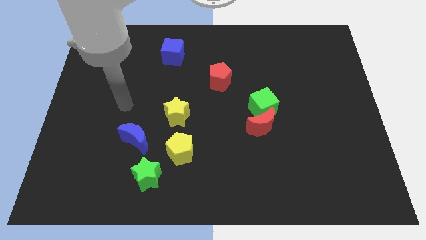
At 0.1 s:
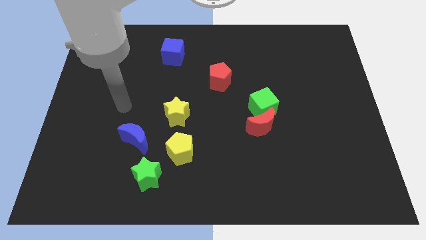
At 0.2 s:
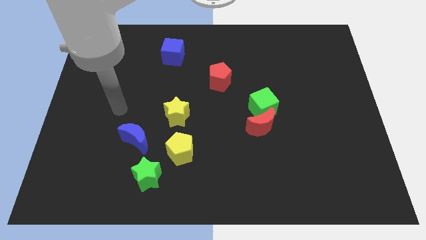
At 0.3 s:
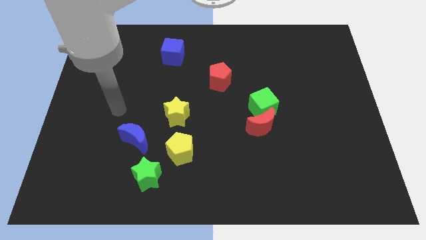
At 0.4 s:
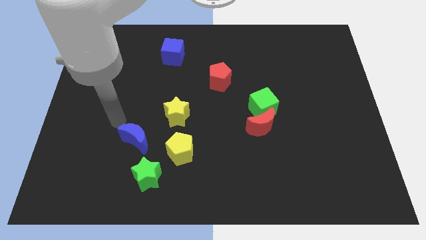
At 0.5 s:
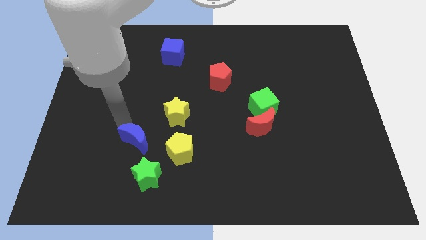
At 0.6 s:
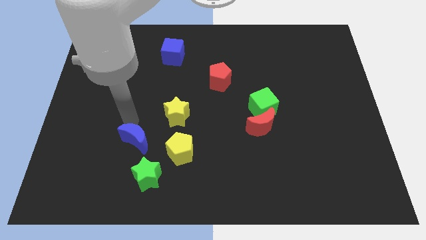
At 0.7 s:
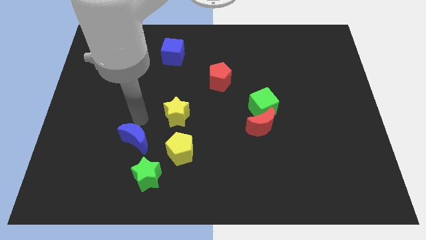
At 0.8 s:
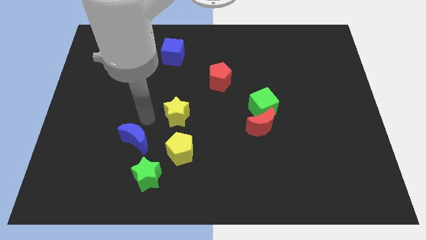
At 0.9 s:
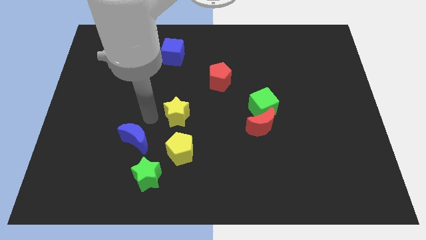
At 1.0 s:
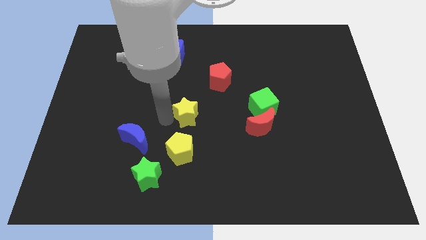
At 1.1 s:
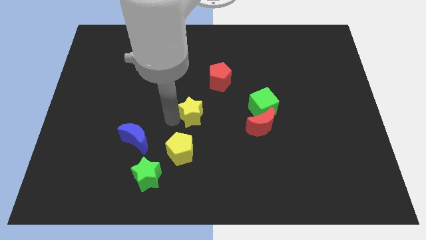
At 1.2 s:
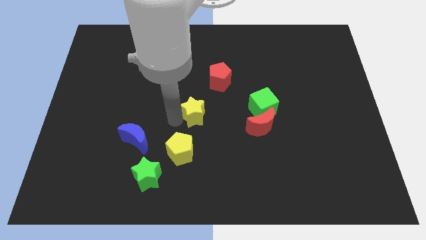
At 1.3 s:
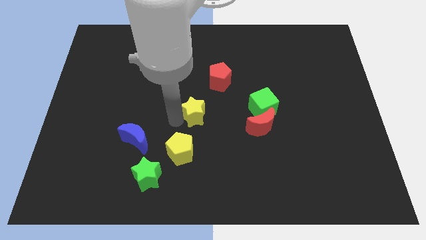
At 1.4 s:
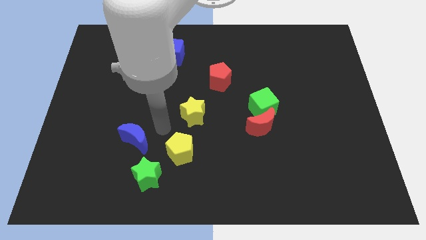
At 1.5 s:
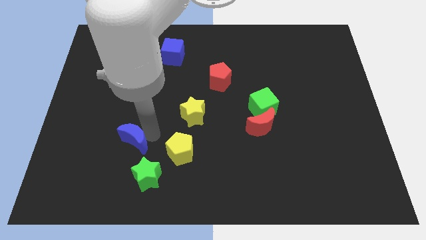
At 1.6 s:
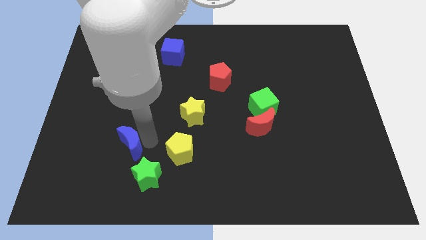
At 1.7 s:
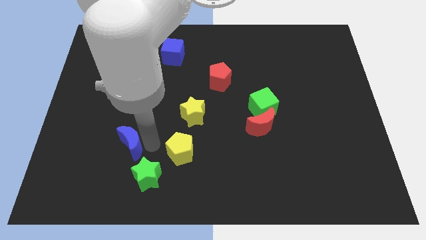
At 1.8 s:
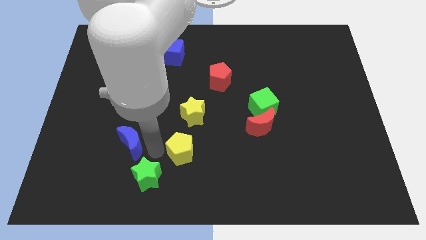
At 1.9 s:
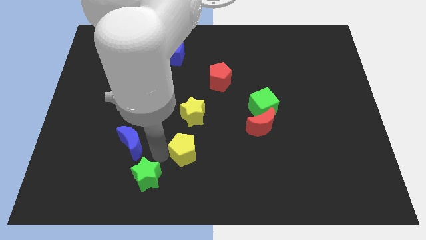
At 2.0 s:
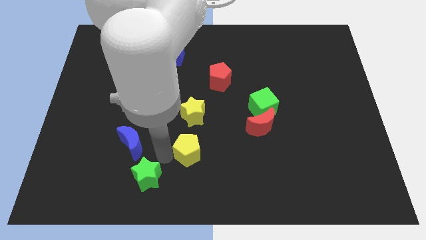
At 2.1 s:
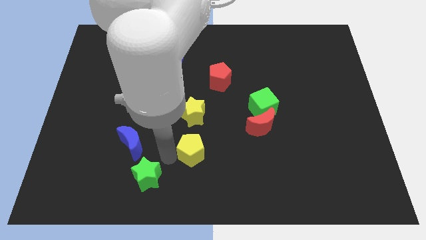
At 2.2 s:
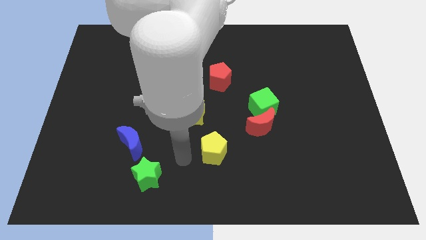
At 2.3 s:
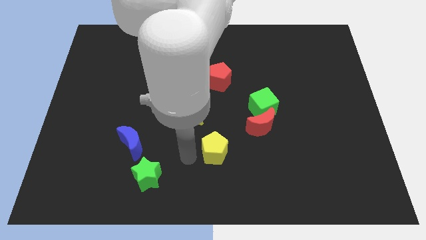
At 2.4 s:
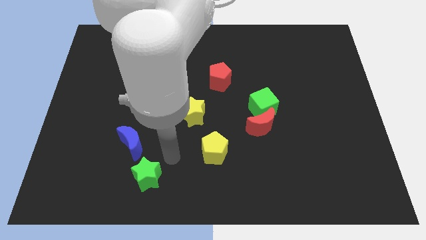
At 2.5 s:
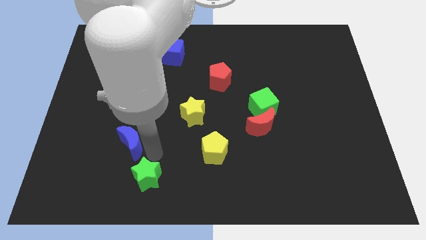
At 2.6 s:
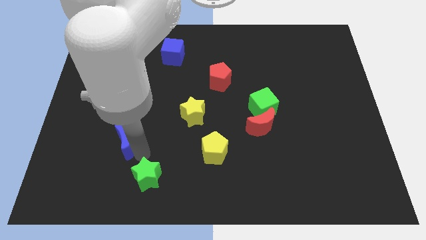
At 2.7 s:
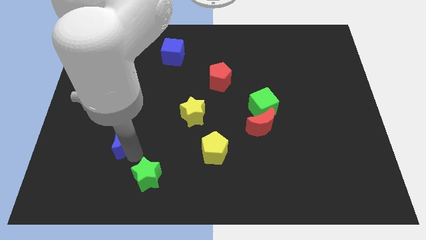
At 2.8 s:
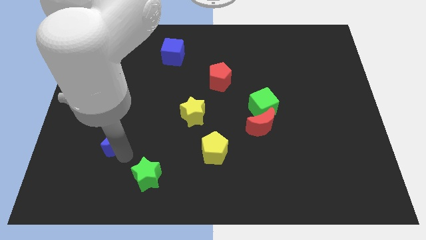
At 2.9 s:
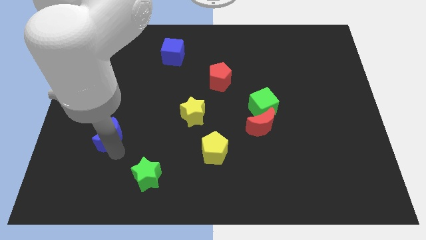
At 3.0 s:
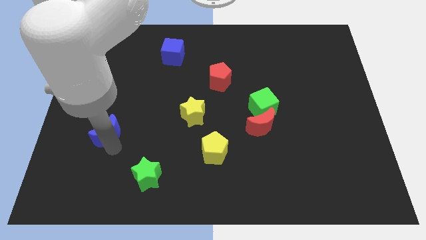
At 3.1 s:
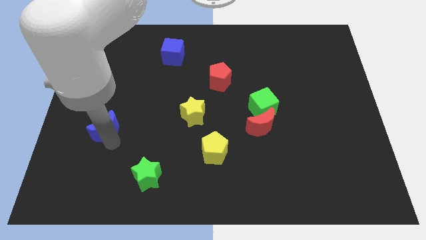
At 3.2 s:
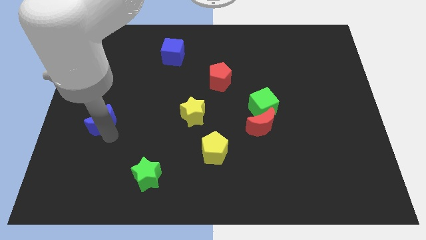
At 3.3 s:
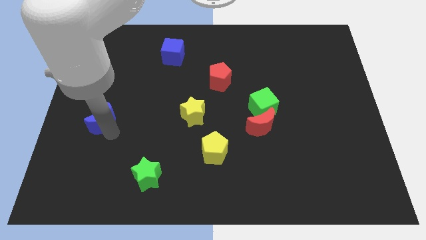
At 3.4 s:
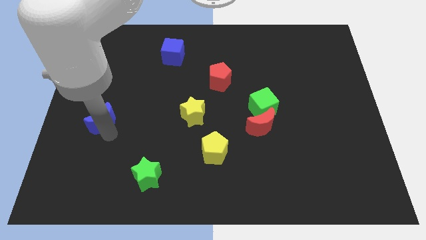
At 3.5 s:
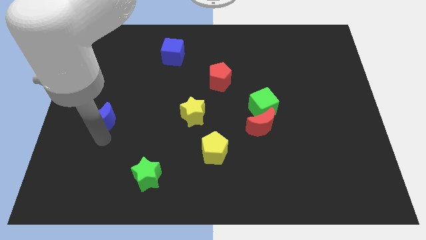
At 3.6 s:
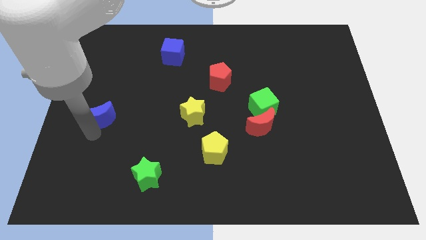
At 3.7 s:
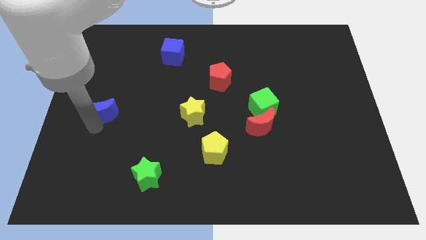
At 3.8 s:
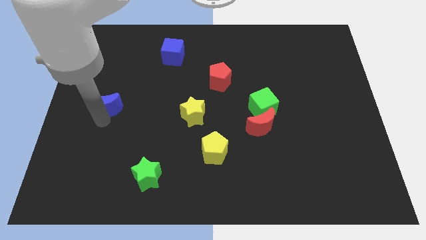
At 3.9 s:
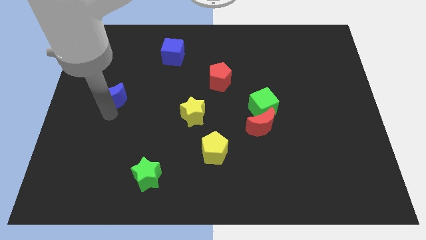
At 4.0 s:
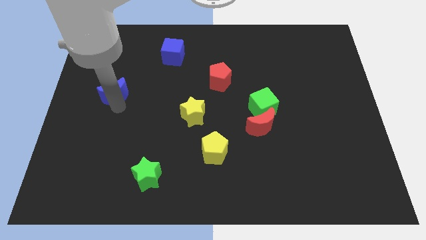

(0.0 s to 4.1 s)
move the blue crescent to the top of the board

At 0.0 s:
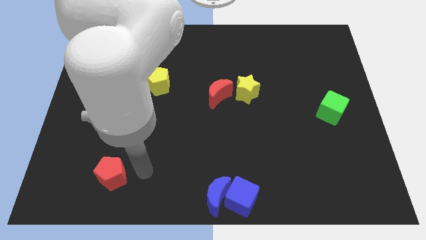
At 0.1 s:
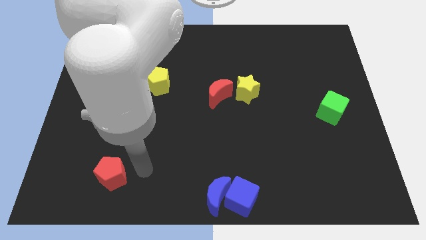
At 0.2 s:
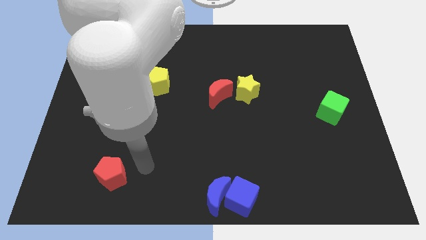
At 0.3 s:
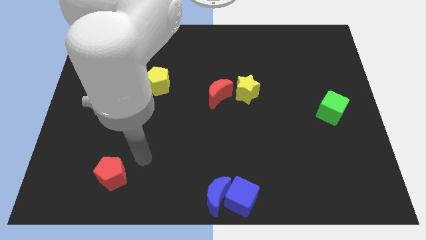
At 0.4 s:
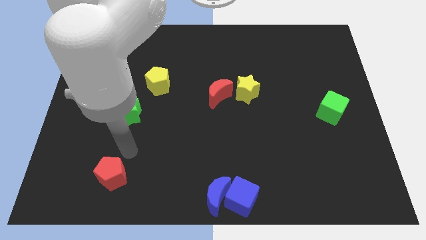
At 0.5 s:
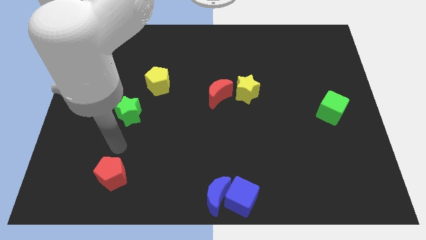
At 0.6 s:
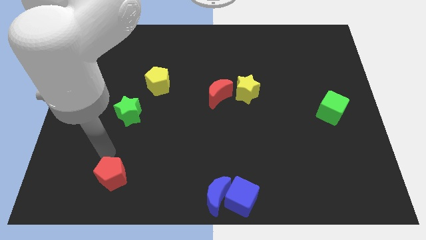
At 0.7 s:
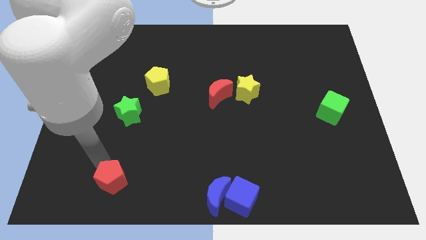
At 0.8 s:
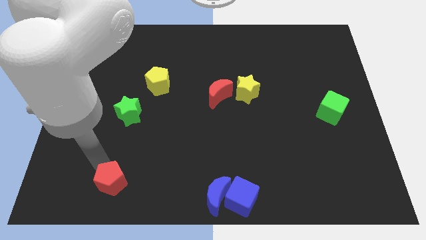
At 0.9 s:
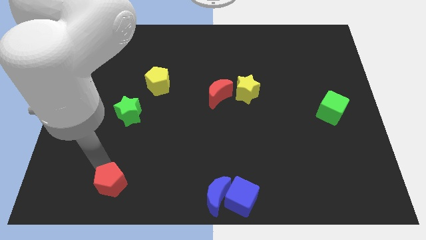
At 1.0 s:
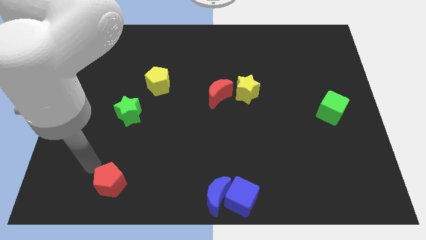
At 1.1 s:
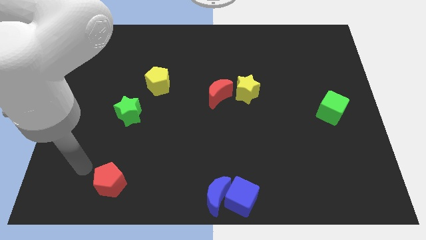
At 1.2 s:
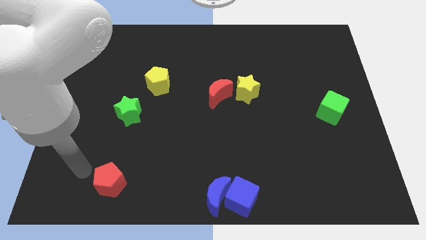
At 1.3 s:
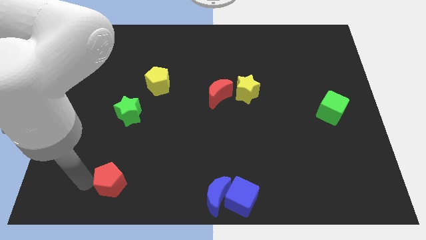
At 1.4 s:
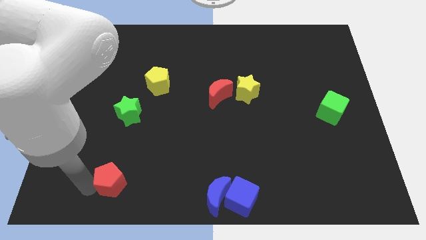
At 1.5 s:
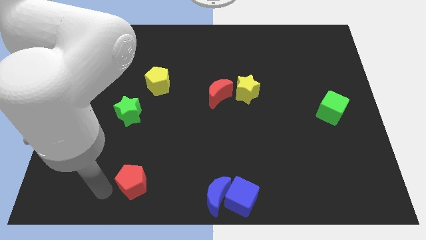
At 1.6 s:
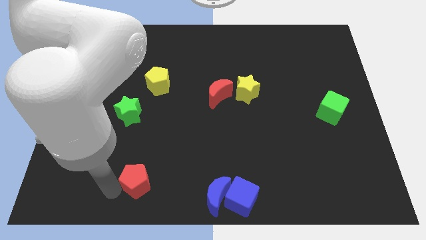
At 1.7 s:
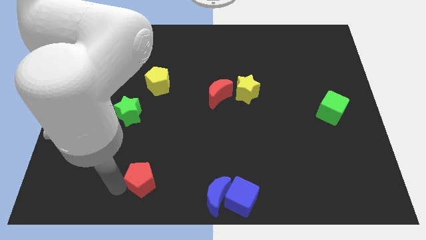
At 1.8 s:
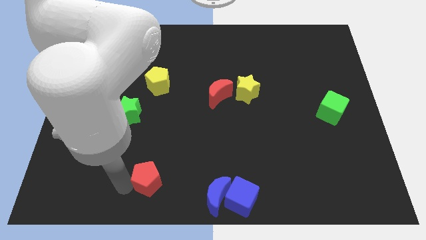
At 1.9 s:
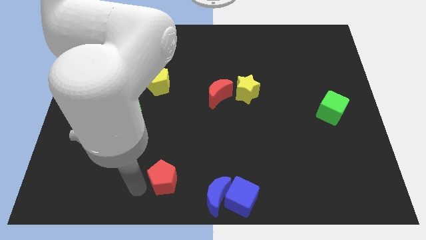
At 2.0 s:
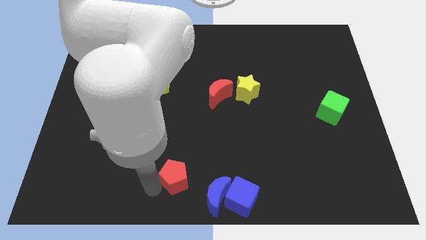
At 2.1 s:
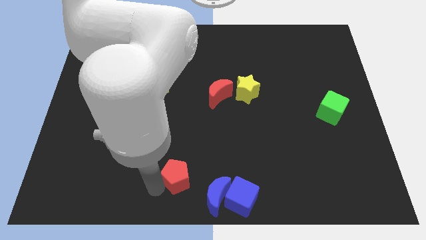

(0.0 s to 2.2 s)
move the red pentagon towards the bottom center of the board

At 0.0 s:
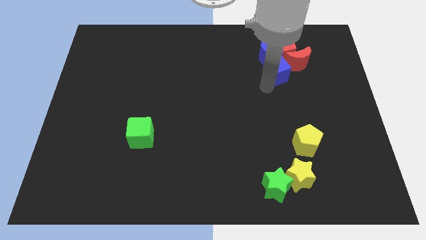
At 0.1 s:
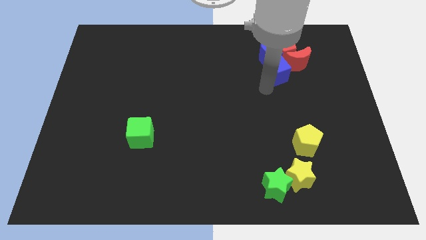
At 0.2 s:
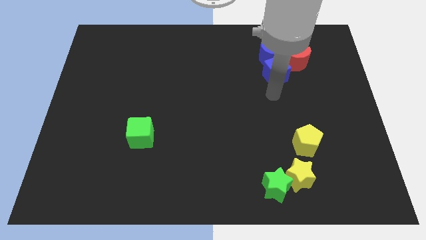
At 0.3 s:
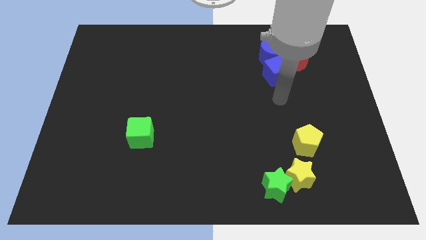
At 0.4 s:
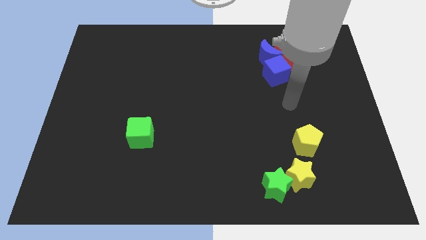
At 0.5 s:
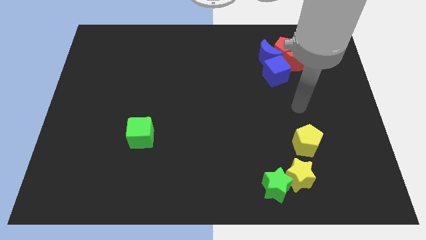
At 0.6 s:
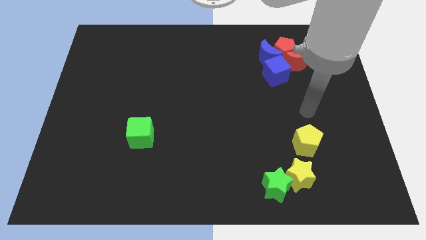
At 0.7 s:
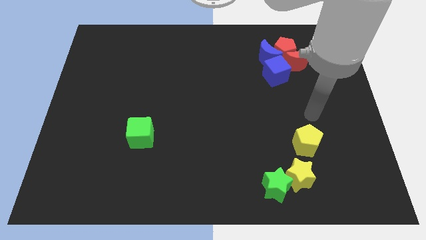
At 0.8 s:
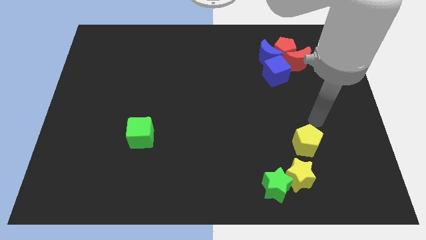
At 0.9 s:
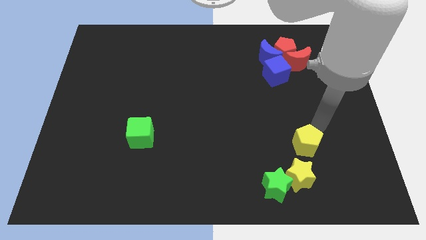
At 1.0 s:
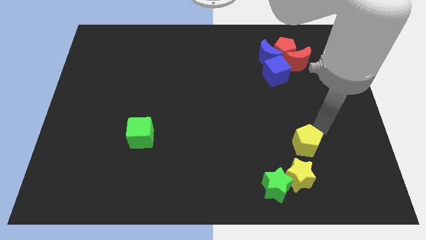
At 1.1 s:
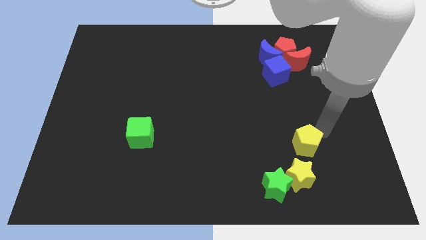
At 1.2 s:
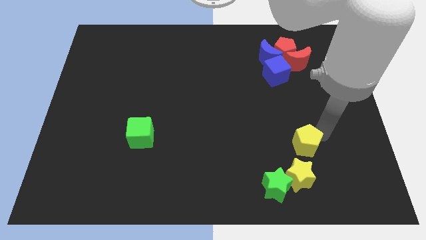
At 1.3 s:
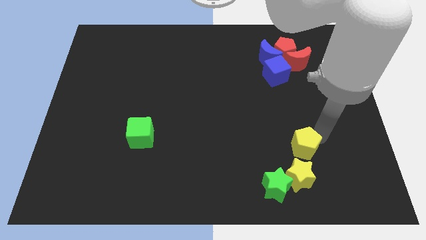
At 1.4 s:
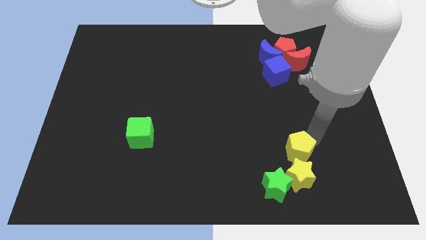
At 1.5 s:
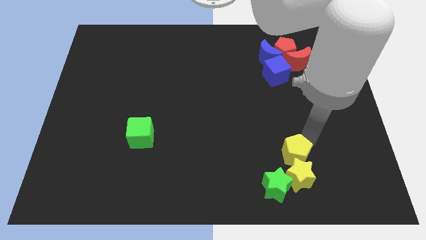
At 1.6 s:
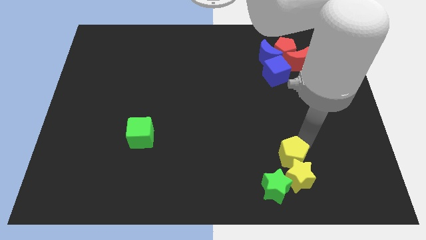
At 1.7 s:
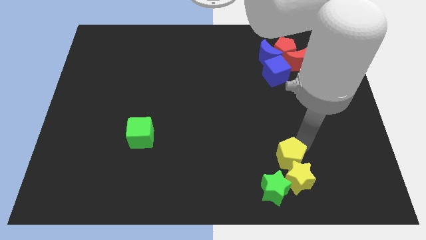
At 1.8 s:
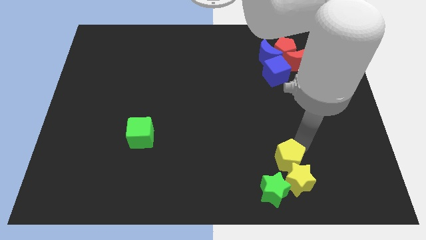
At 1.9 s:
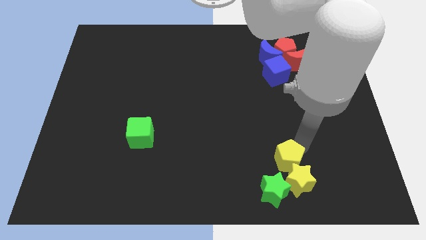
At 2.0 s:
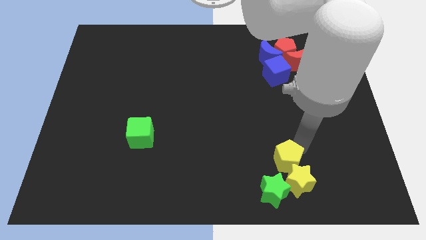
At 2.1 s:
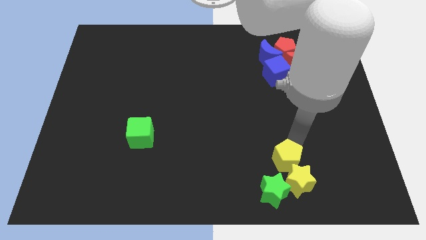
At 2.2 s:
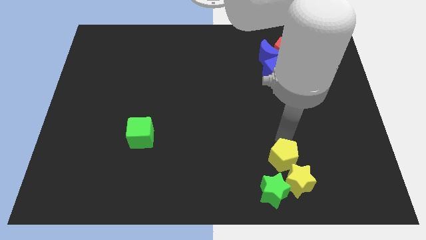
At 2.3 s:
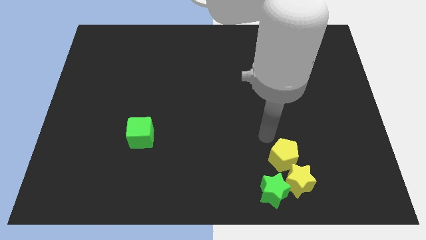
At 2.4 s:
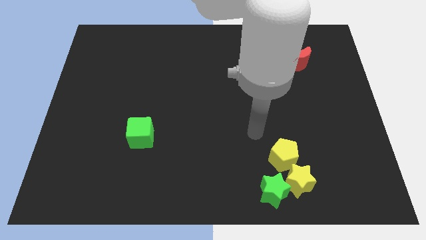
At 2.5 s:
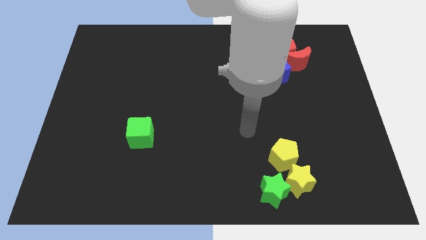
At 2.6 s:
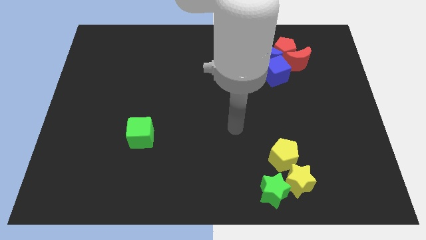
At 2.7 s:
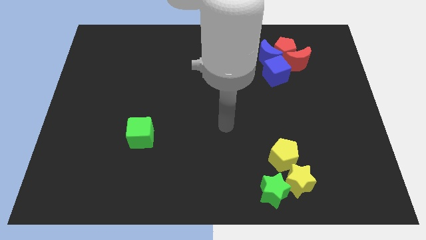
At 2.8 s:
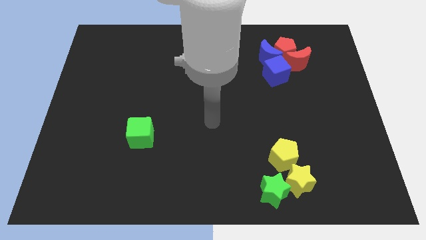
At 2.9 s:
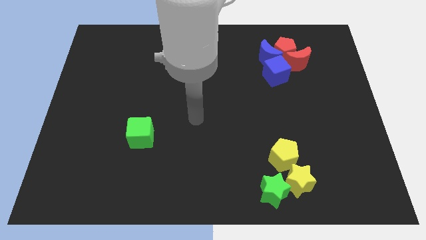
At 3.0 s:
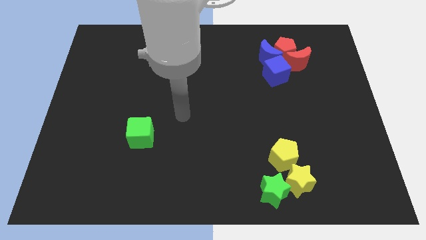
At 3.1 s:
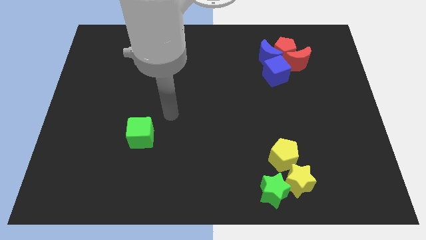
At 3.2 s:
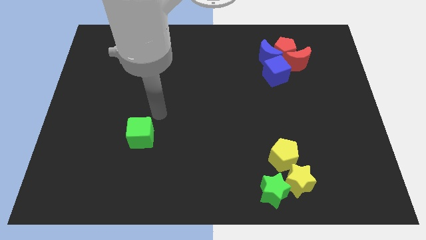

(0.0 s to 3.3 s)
push the yellow pentagon into yellow star diagonally
